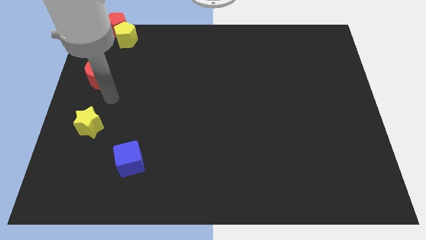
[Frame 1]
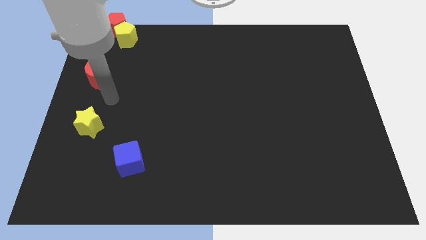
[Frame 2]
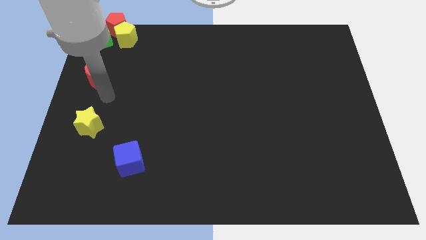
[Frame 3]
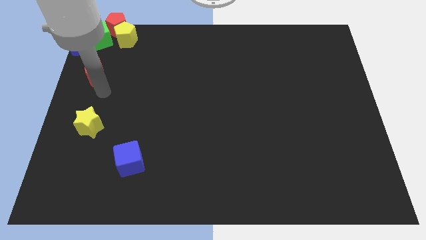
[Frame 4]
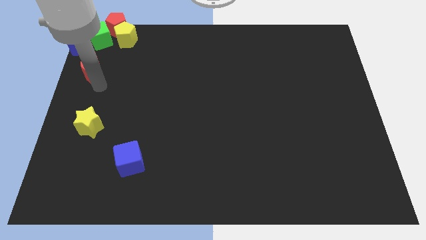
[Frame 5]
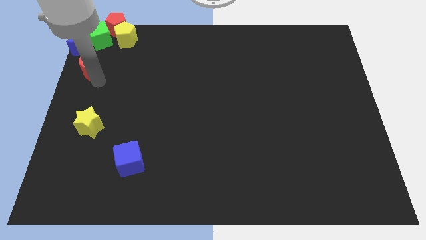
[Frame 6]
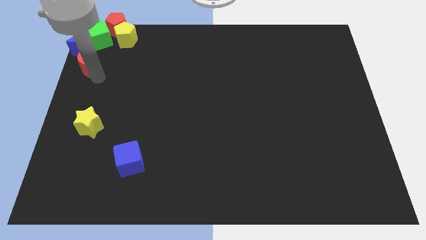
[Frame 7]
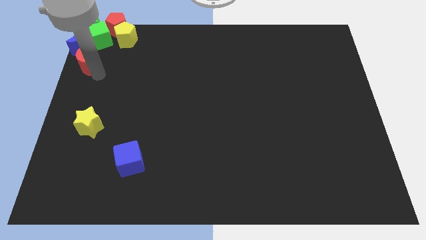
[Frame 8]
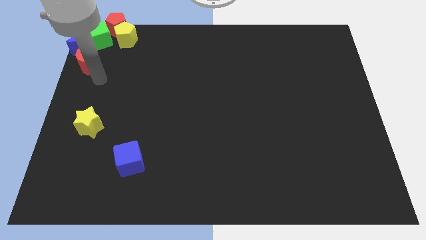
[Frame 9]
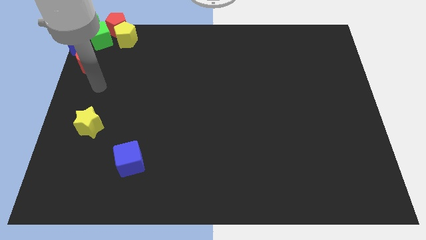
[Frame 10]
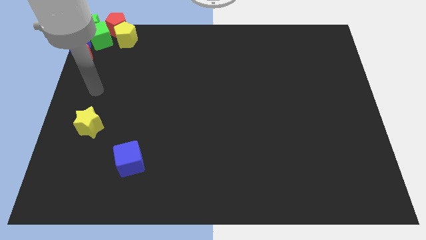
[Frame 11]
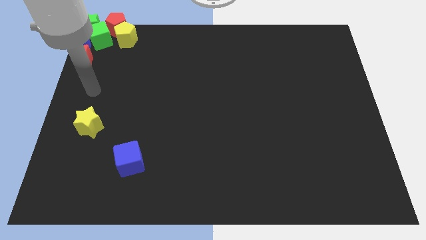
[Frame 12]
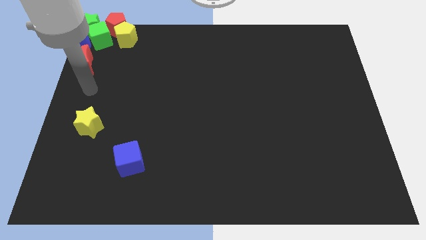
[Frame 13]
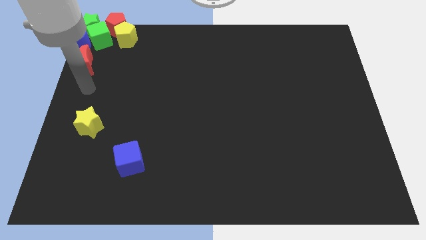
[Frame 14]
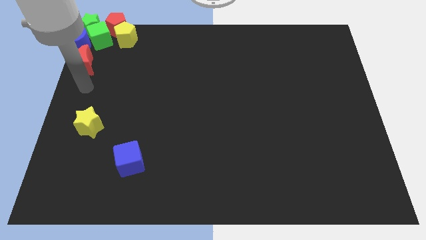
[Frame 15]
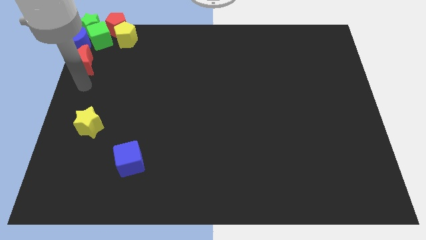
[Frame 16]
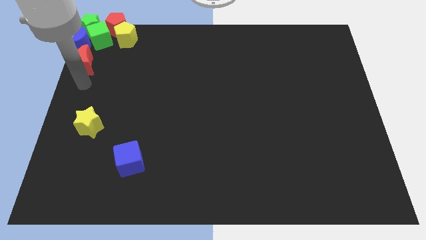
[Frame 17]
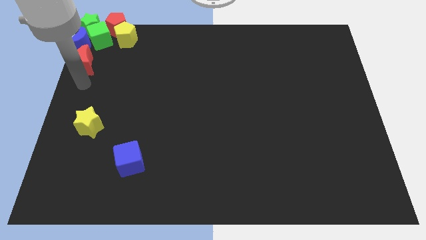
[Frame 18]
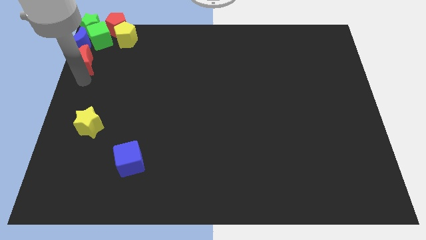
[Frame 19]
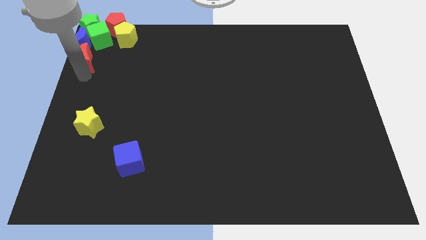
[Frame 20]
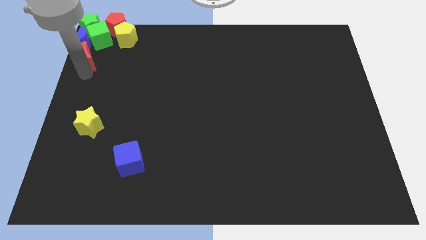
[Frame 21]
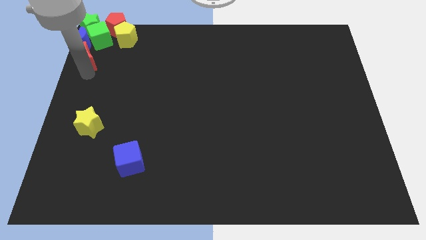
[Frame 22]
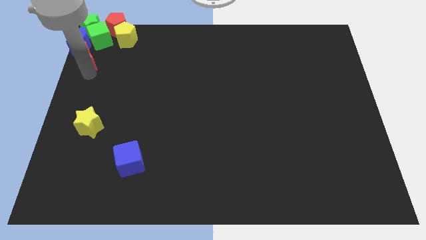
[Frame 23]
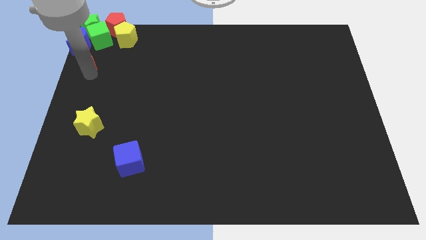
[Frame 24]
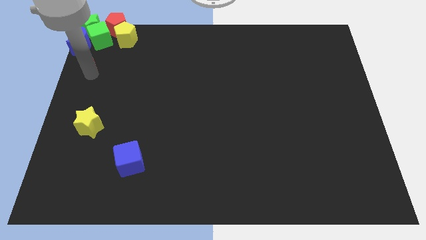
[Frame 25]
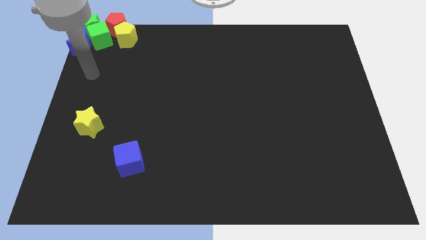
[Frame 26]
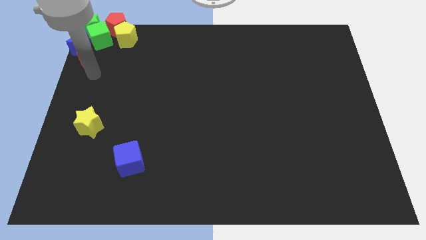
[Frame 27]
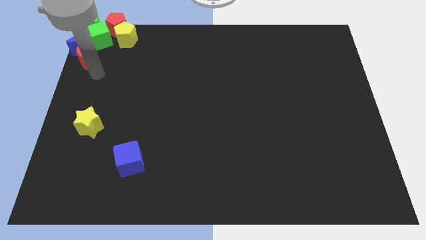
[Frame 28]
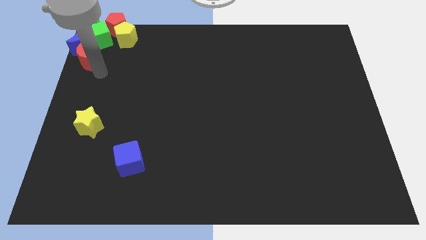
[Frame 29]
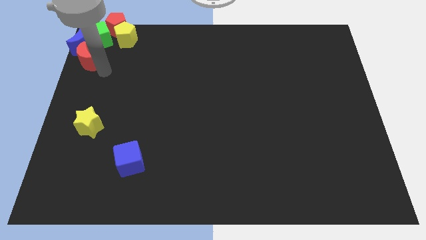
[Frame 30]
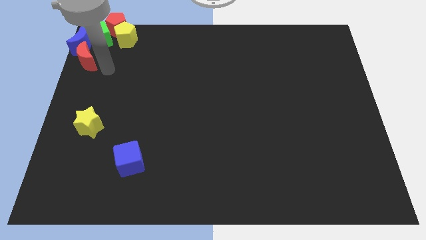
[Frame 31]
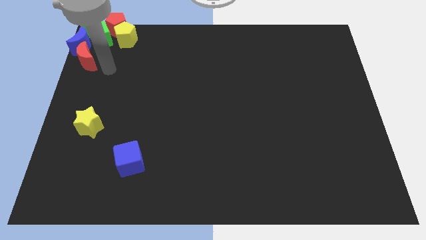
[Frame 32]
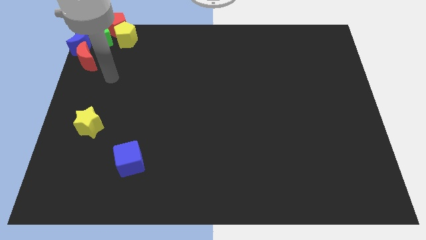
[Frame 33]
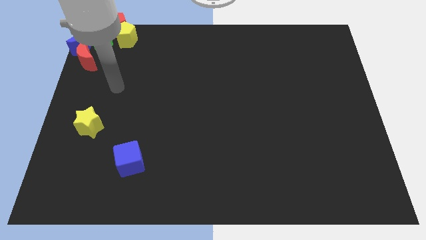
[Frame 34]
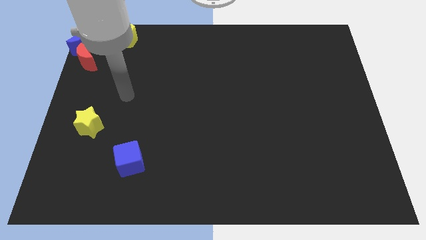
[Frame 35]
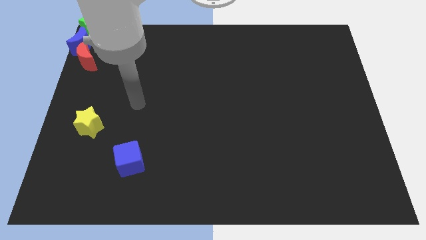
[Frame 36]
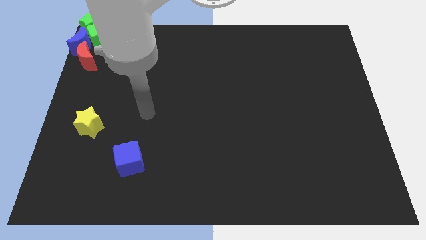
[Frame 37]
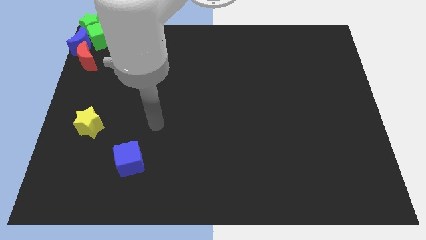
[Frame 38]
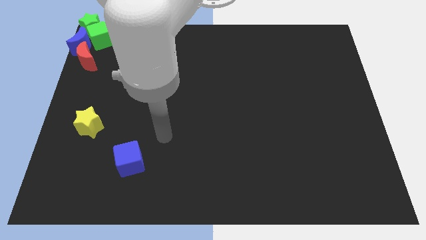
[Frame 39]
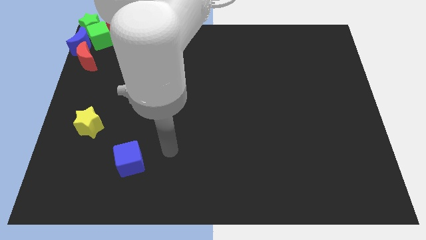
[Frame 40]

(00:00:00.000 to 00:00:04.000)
put the red crescent below to the blue moon

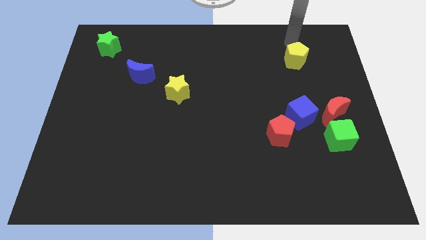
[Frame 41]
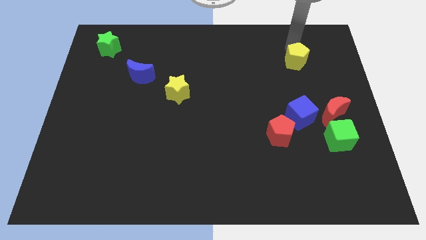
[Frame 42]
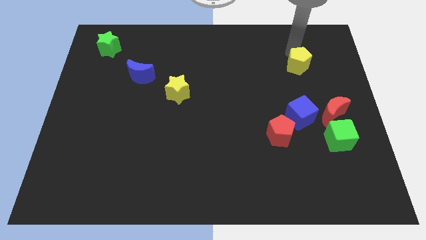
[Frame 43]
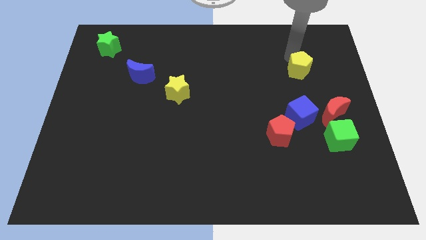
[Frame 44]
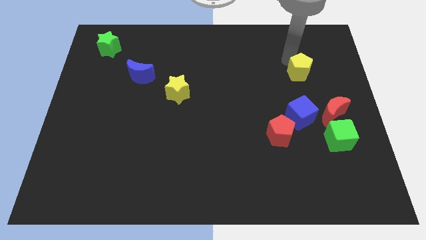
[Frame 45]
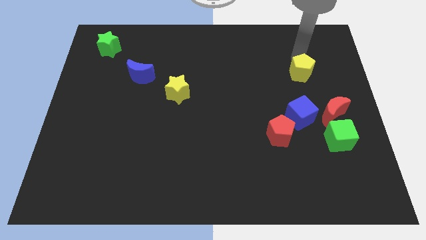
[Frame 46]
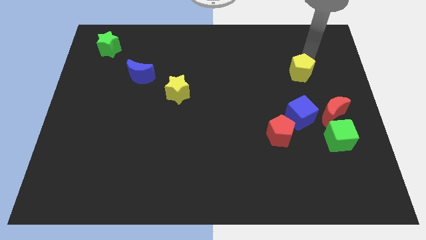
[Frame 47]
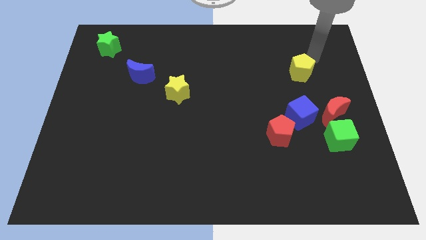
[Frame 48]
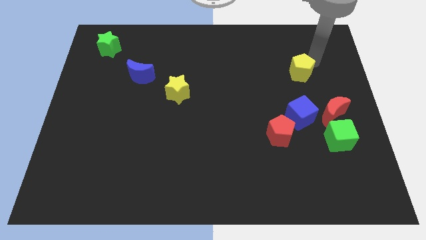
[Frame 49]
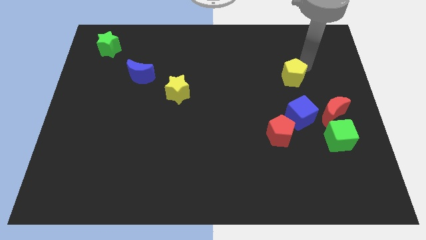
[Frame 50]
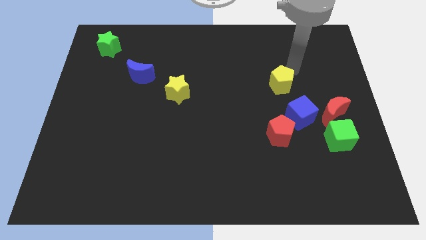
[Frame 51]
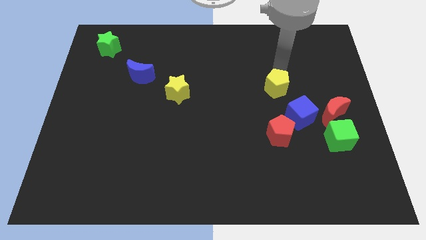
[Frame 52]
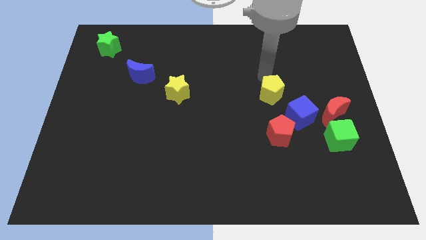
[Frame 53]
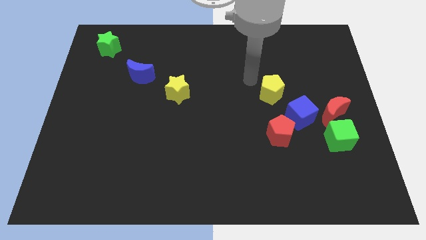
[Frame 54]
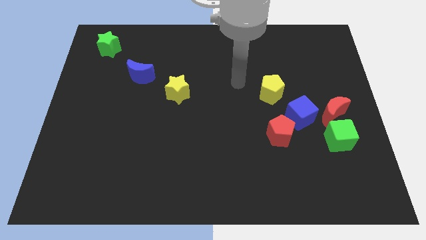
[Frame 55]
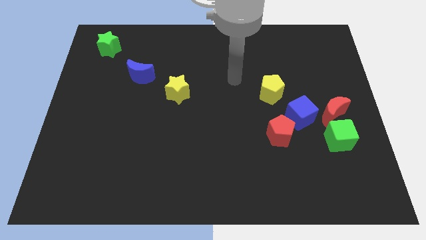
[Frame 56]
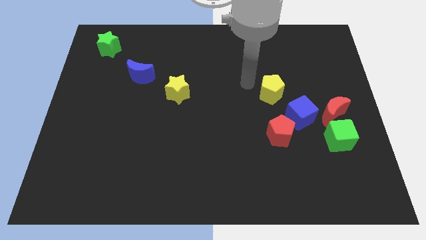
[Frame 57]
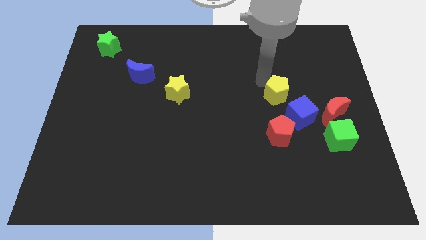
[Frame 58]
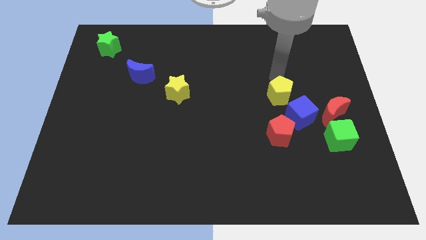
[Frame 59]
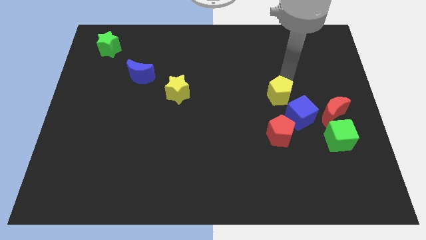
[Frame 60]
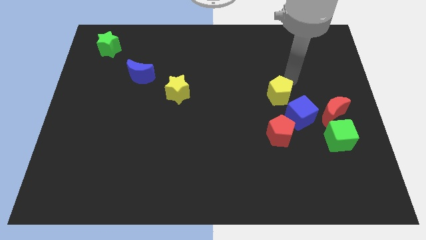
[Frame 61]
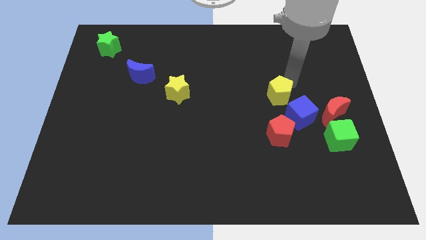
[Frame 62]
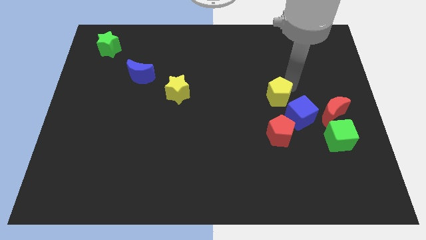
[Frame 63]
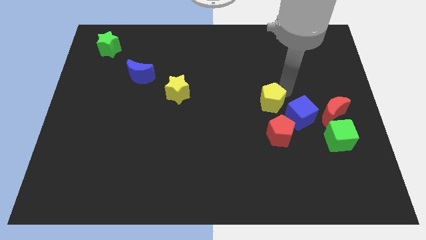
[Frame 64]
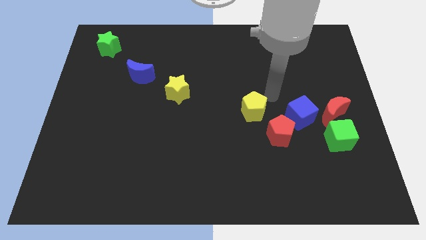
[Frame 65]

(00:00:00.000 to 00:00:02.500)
place the yellow pentagon vertical above red pentagon

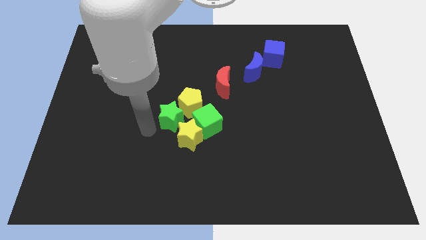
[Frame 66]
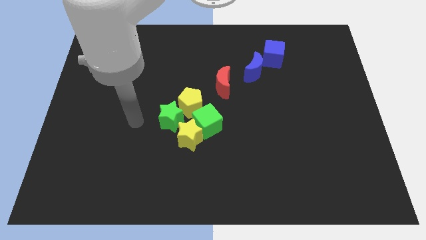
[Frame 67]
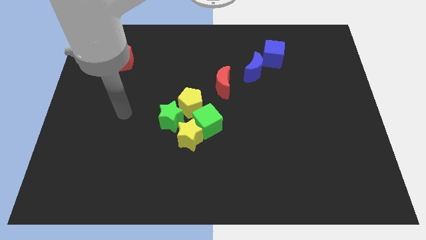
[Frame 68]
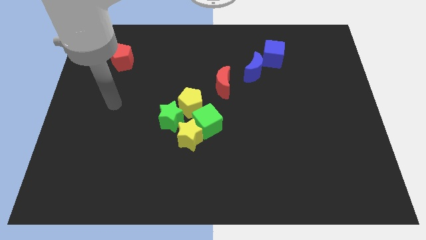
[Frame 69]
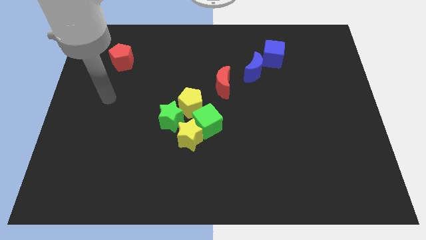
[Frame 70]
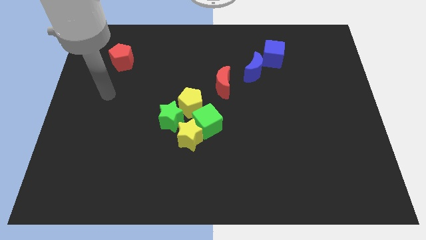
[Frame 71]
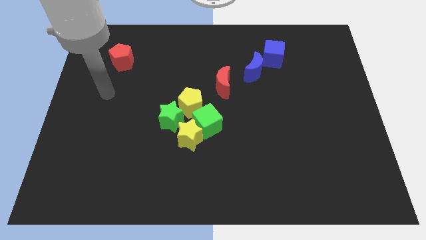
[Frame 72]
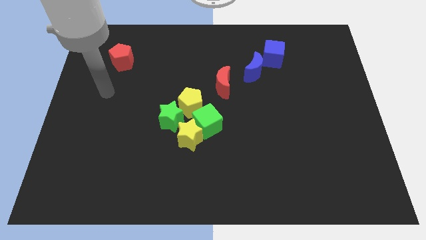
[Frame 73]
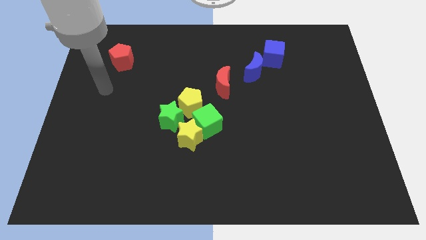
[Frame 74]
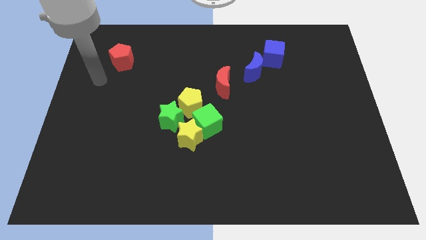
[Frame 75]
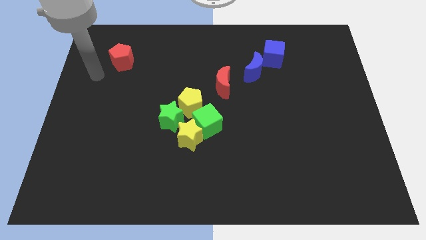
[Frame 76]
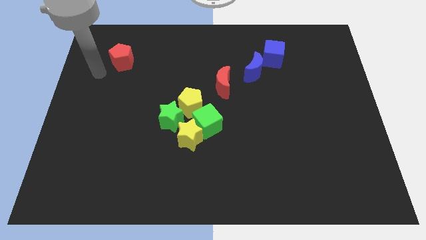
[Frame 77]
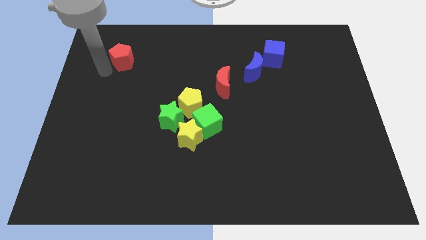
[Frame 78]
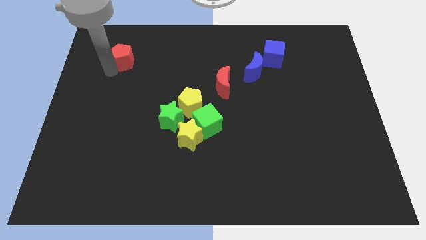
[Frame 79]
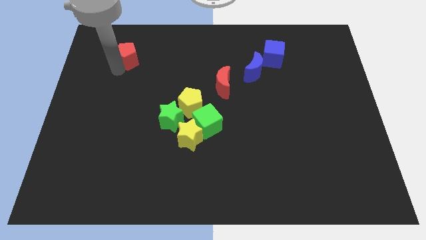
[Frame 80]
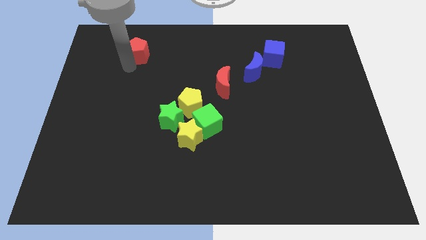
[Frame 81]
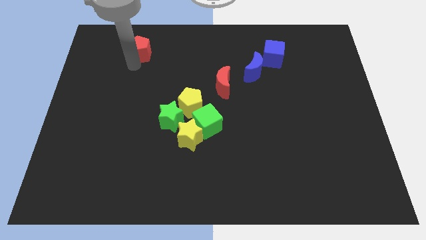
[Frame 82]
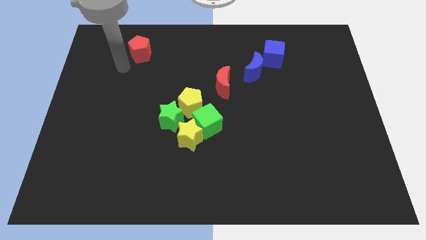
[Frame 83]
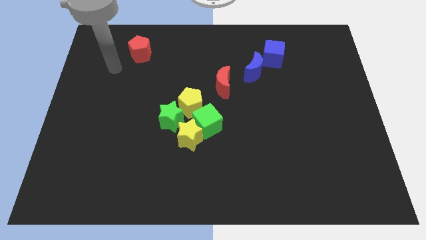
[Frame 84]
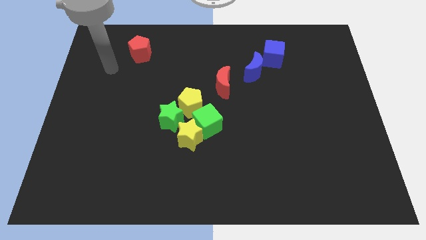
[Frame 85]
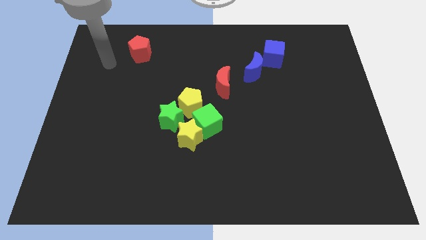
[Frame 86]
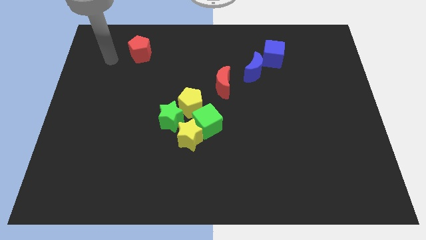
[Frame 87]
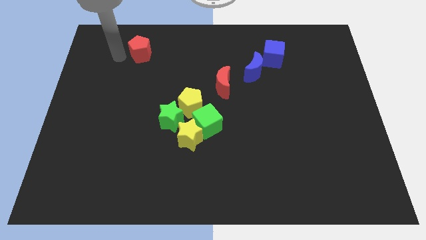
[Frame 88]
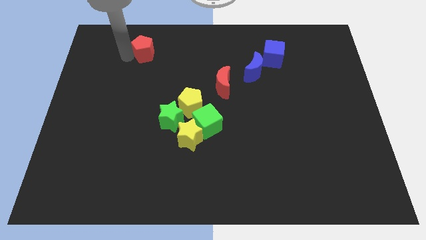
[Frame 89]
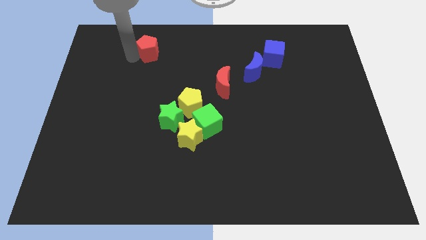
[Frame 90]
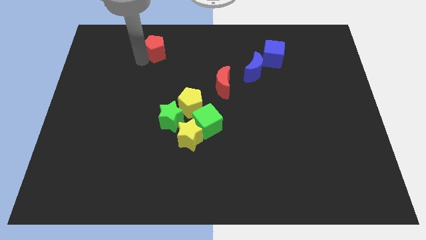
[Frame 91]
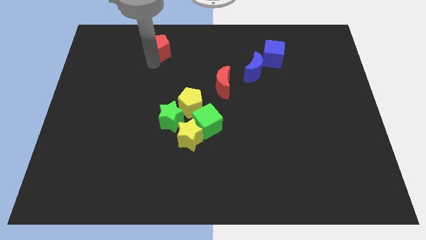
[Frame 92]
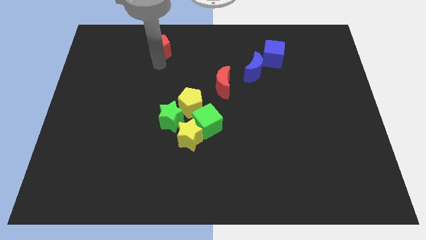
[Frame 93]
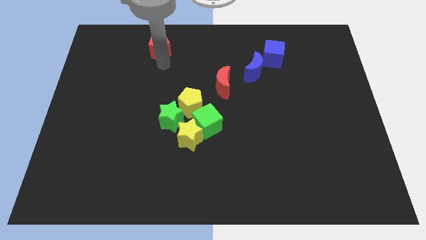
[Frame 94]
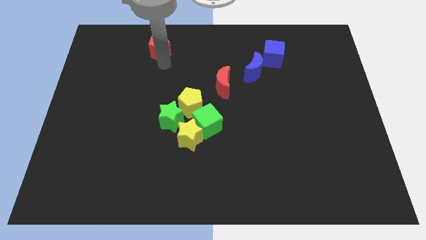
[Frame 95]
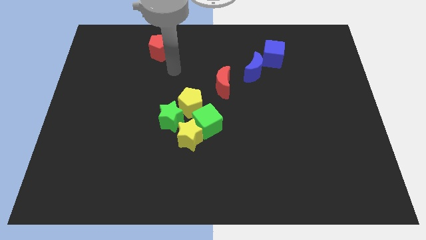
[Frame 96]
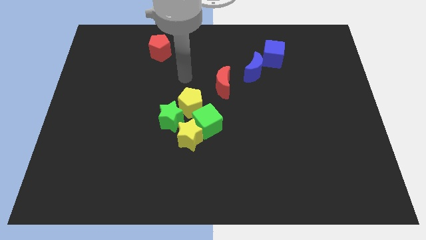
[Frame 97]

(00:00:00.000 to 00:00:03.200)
move red pentagon towards the right of the board
